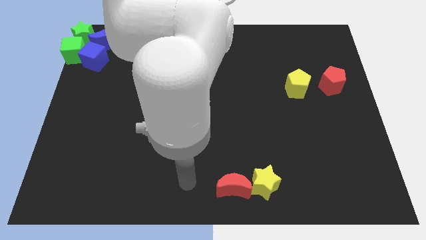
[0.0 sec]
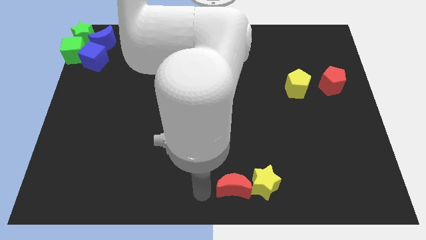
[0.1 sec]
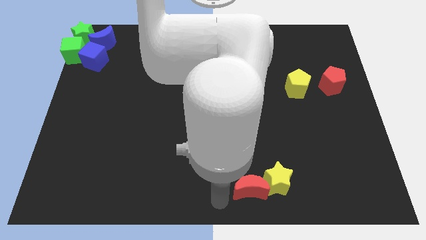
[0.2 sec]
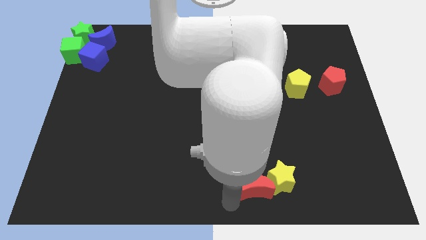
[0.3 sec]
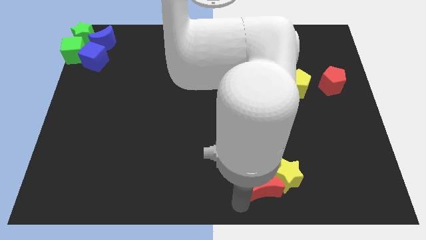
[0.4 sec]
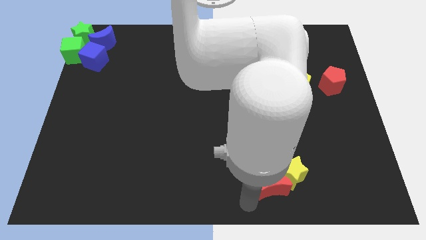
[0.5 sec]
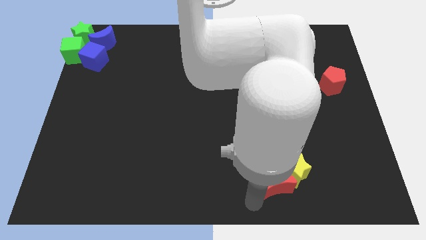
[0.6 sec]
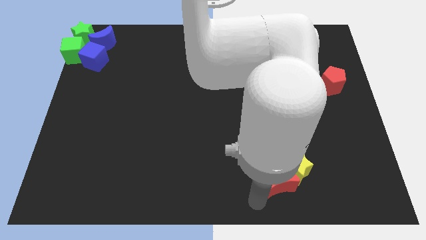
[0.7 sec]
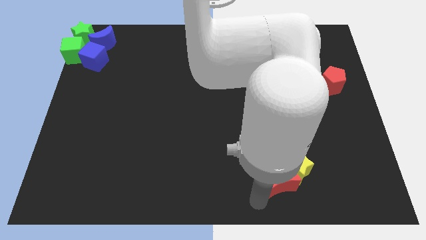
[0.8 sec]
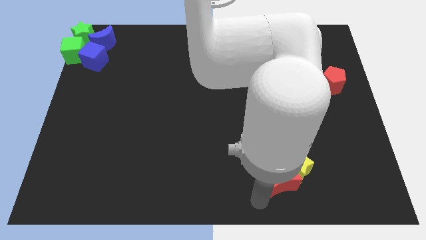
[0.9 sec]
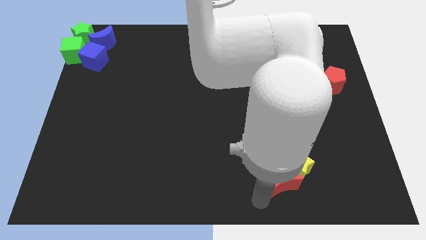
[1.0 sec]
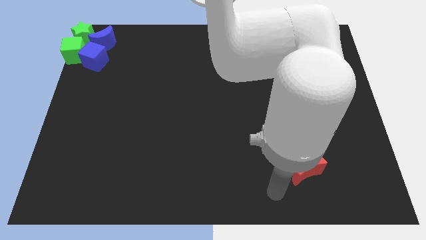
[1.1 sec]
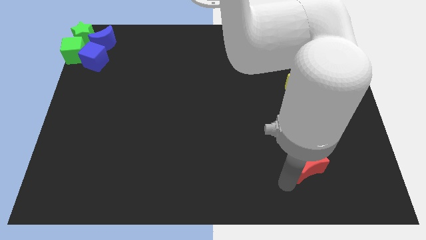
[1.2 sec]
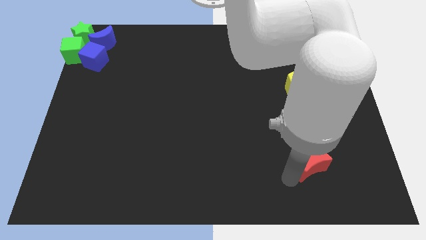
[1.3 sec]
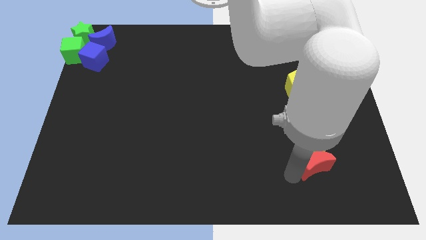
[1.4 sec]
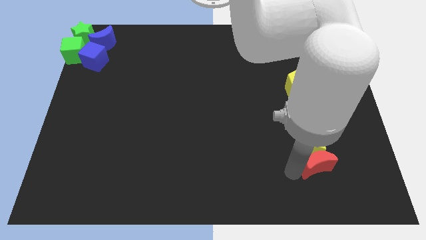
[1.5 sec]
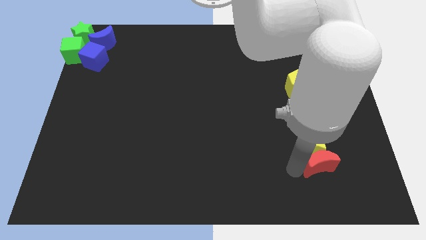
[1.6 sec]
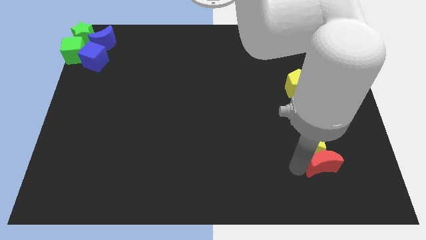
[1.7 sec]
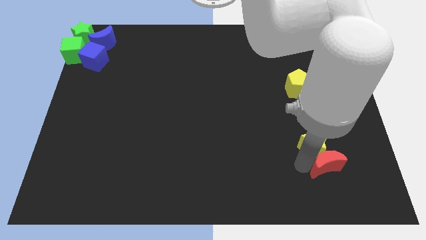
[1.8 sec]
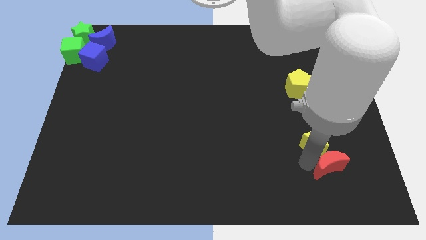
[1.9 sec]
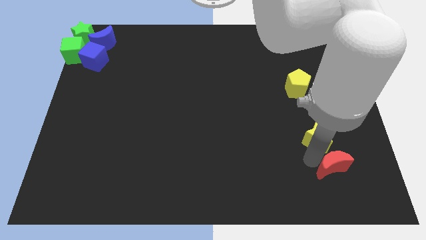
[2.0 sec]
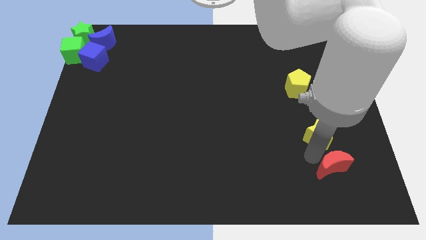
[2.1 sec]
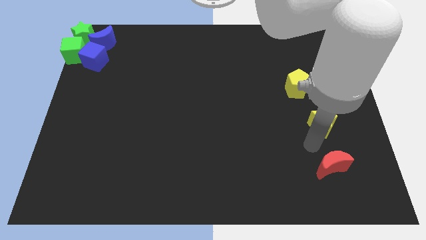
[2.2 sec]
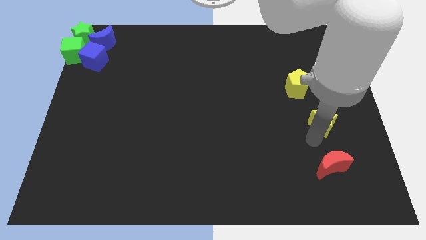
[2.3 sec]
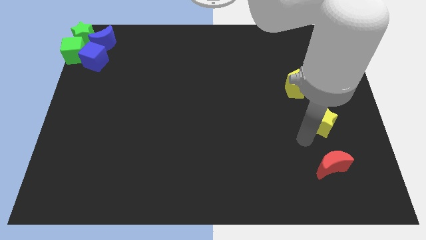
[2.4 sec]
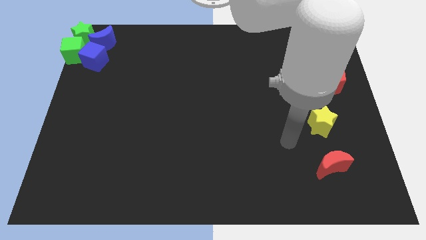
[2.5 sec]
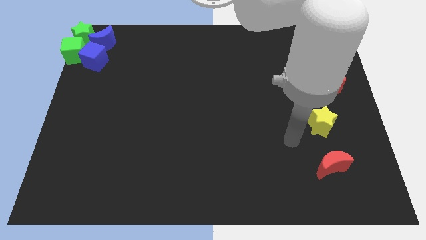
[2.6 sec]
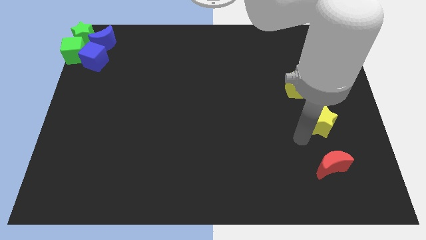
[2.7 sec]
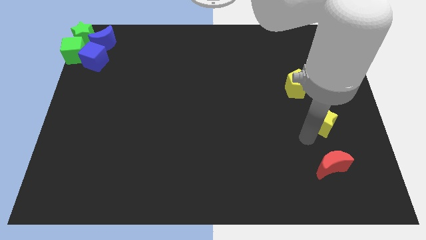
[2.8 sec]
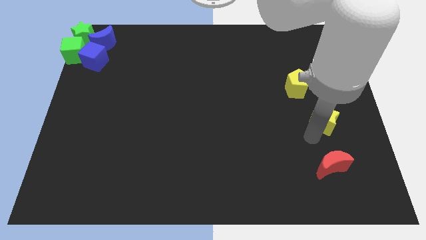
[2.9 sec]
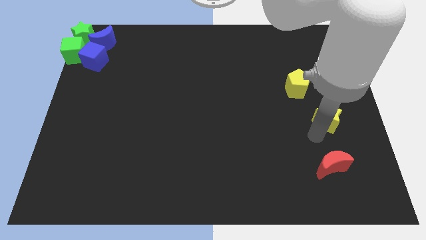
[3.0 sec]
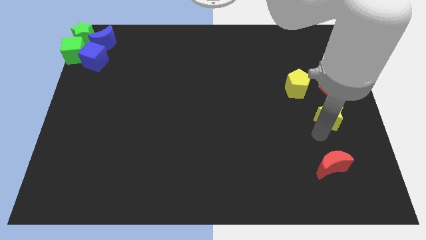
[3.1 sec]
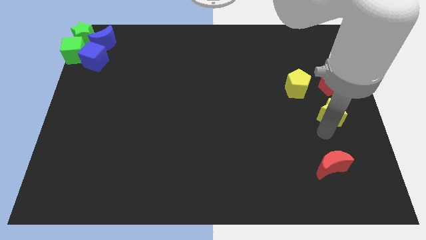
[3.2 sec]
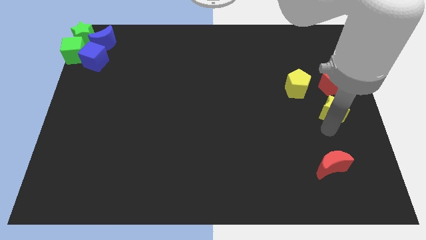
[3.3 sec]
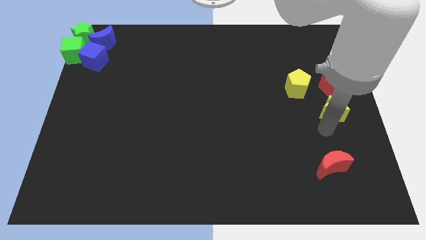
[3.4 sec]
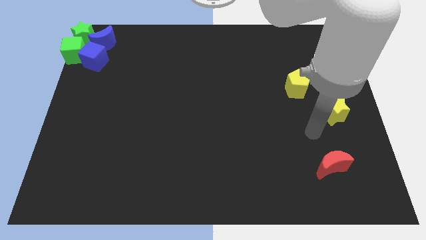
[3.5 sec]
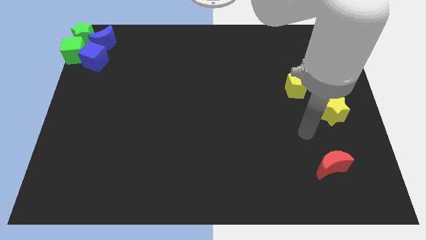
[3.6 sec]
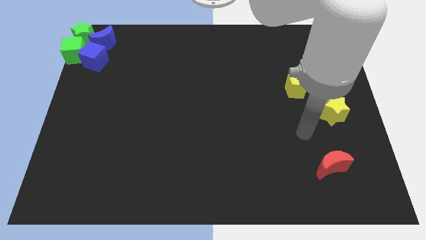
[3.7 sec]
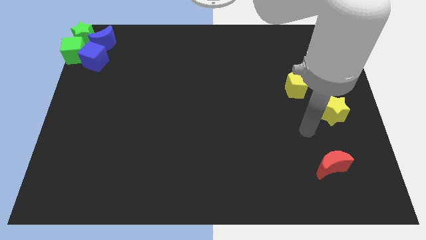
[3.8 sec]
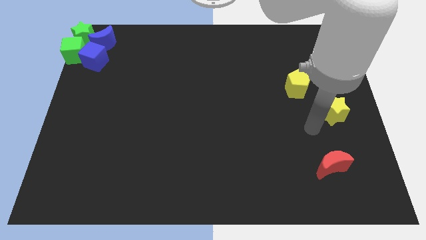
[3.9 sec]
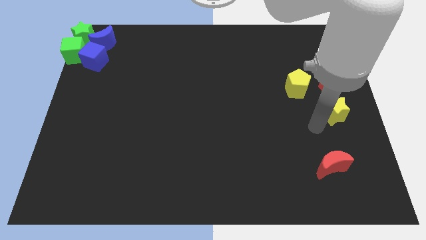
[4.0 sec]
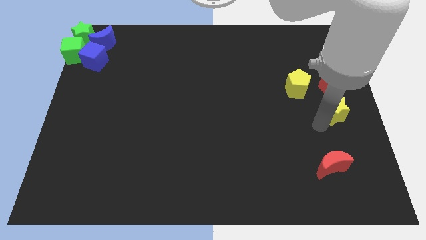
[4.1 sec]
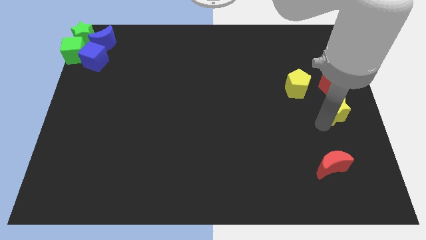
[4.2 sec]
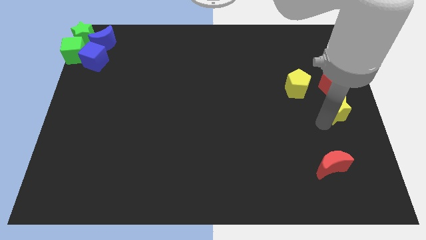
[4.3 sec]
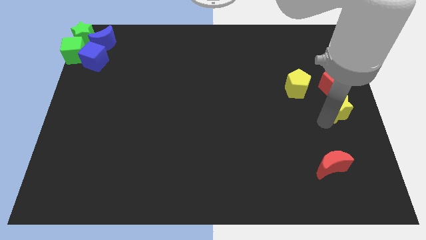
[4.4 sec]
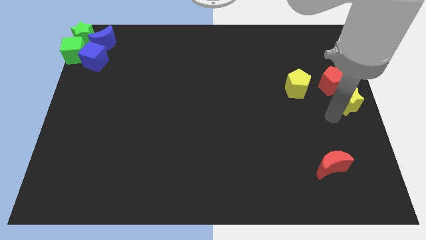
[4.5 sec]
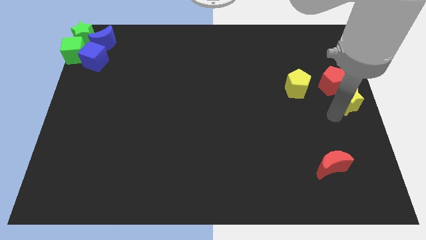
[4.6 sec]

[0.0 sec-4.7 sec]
move the yellow star below the red pentagon

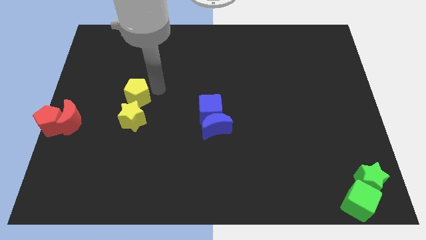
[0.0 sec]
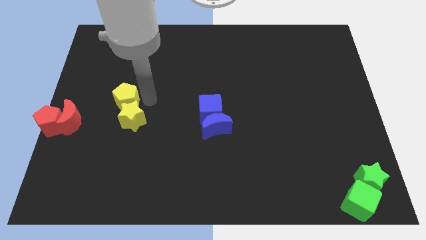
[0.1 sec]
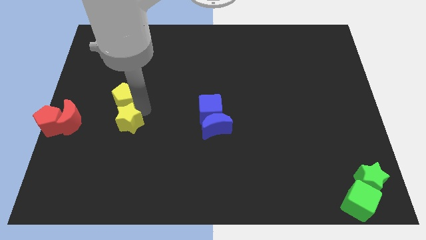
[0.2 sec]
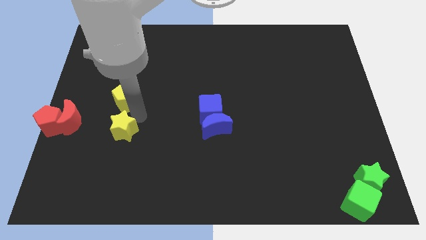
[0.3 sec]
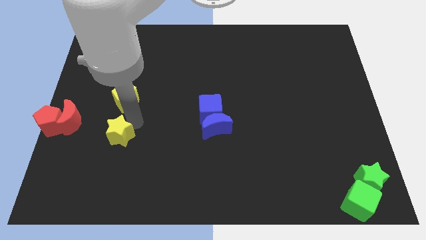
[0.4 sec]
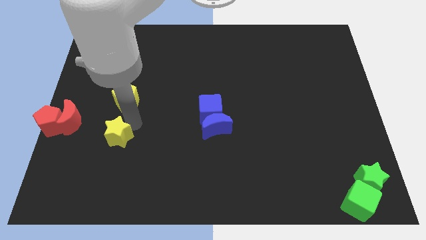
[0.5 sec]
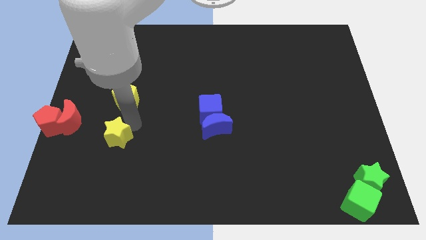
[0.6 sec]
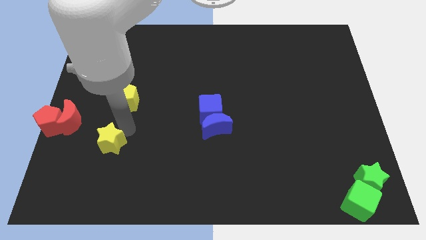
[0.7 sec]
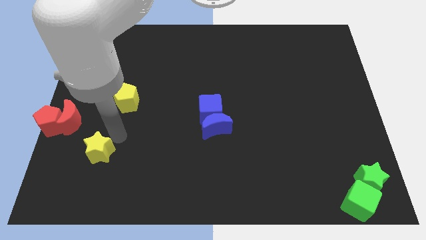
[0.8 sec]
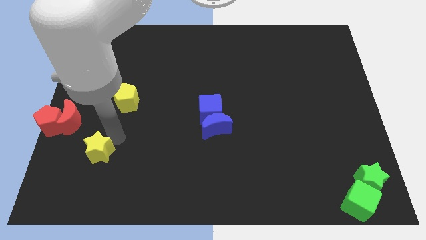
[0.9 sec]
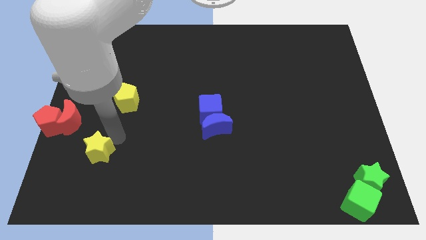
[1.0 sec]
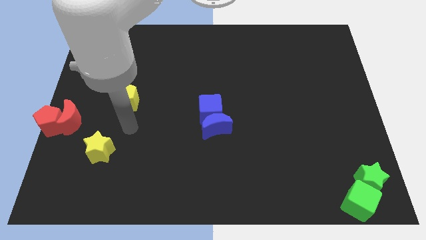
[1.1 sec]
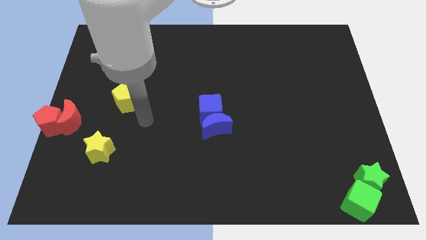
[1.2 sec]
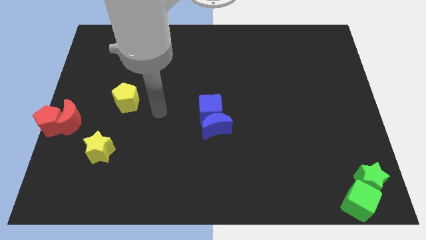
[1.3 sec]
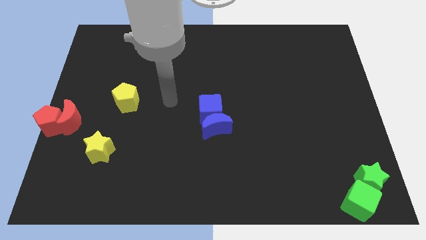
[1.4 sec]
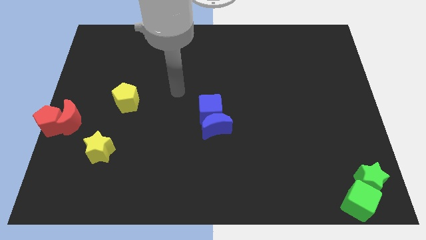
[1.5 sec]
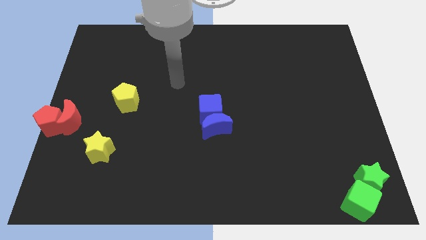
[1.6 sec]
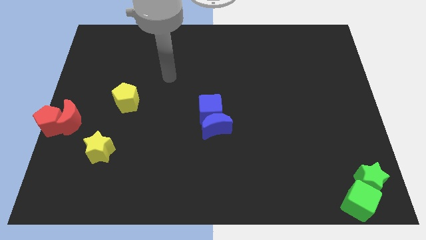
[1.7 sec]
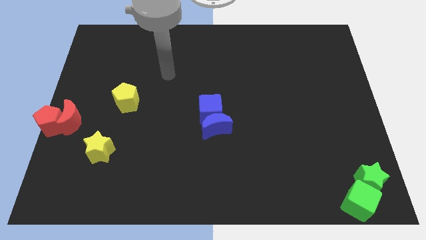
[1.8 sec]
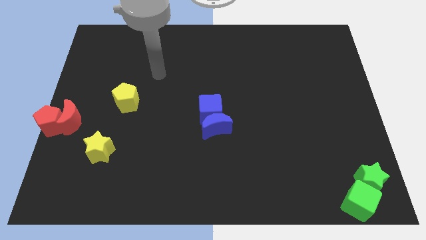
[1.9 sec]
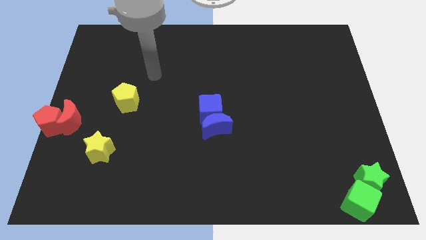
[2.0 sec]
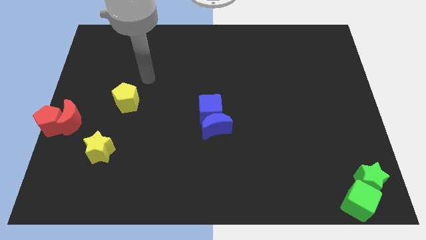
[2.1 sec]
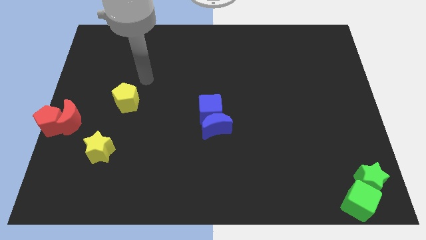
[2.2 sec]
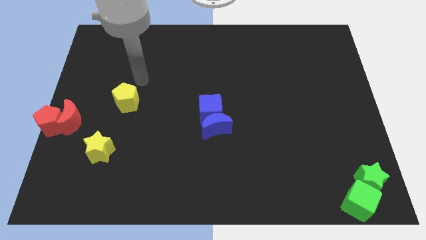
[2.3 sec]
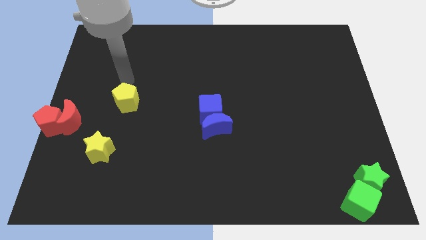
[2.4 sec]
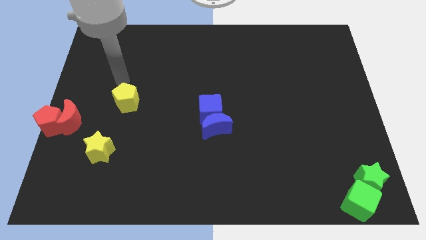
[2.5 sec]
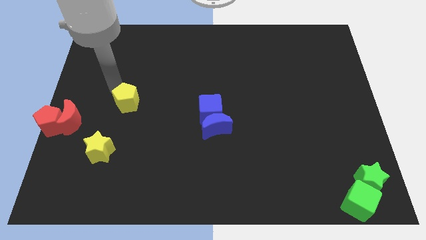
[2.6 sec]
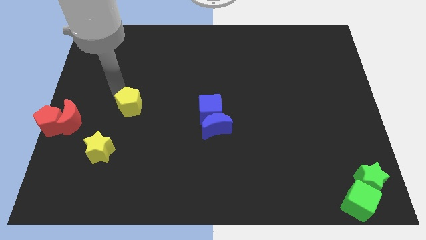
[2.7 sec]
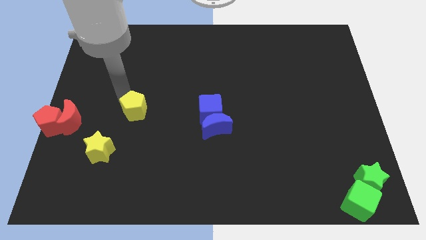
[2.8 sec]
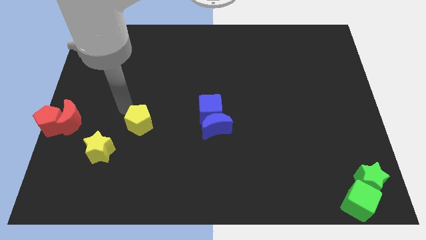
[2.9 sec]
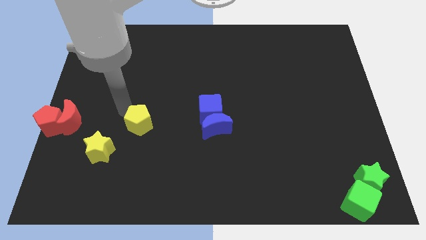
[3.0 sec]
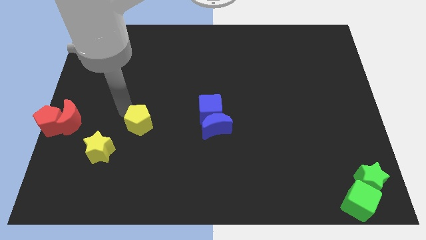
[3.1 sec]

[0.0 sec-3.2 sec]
move the yellow star and the yellow pentagon away from each other

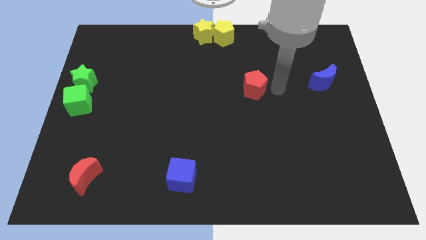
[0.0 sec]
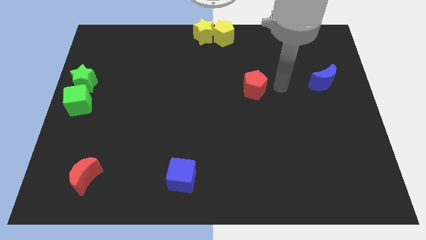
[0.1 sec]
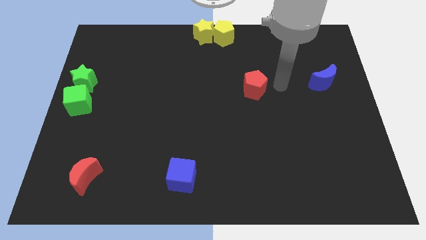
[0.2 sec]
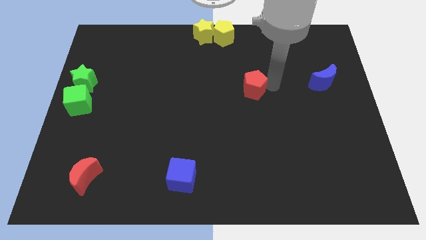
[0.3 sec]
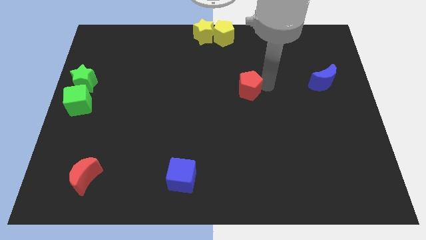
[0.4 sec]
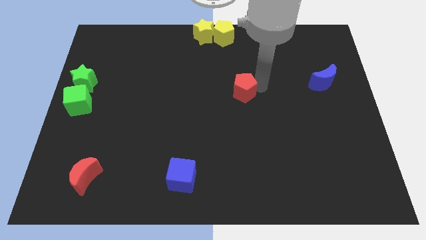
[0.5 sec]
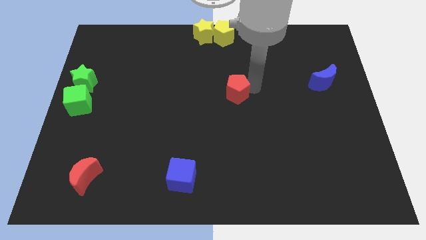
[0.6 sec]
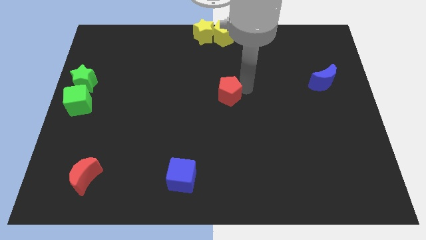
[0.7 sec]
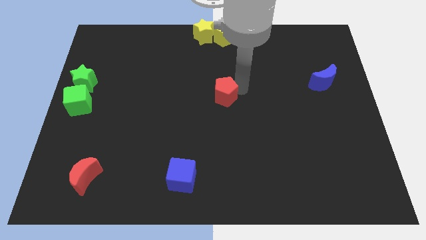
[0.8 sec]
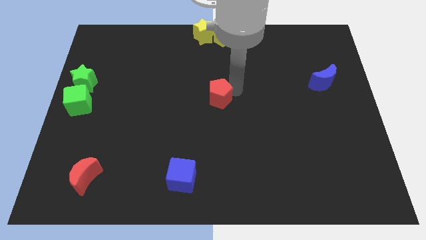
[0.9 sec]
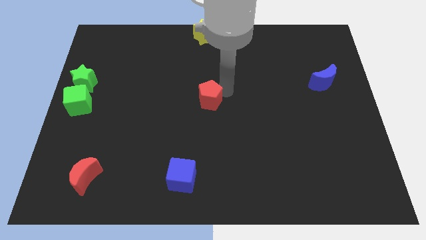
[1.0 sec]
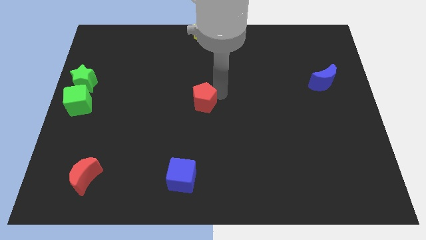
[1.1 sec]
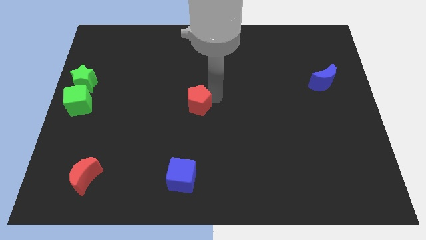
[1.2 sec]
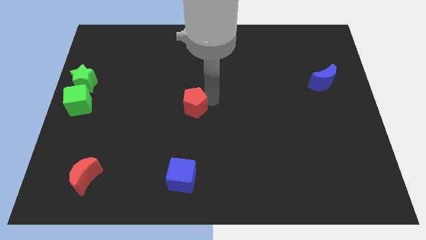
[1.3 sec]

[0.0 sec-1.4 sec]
push the red pentagon to the center of the board
